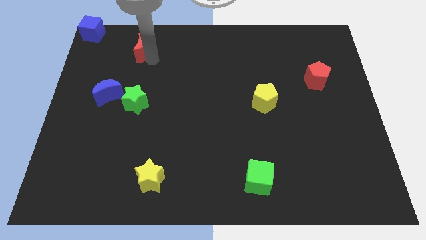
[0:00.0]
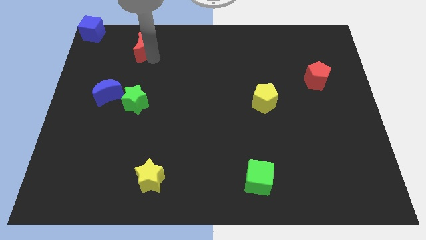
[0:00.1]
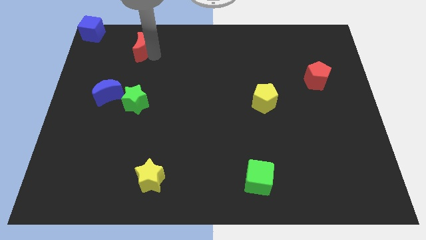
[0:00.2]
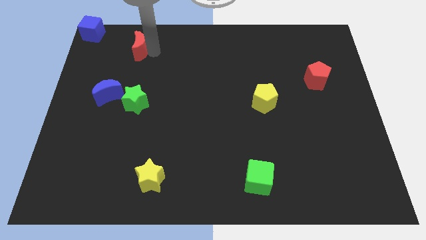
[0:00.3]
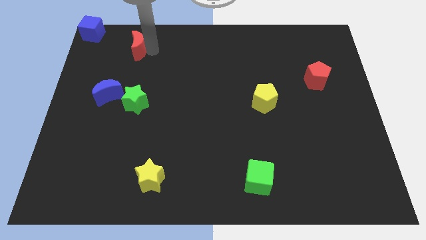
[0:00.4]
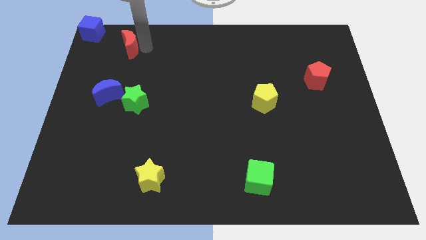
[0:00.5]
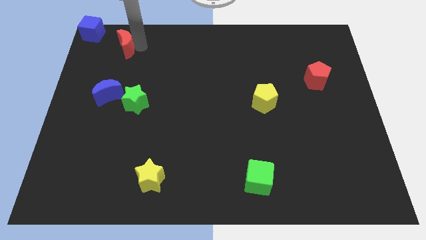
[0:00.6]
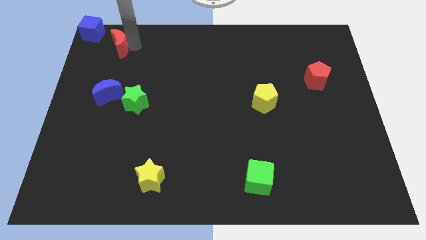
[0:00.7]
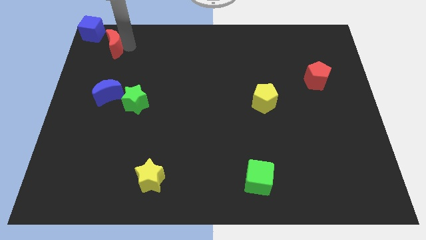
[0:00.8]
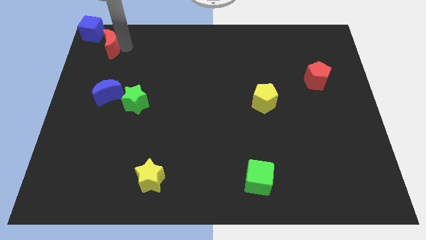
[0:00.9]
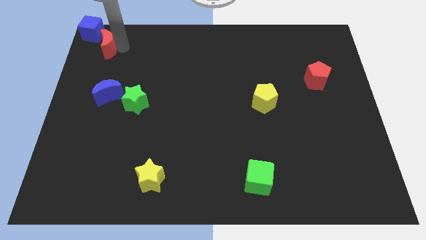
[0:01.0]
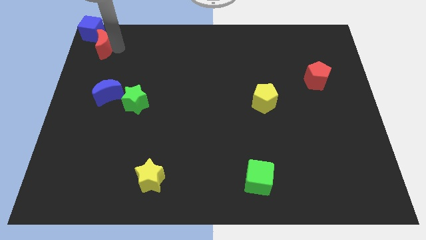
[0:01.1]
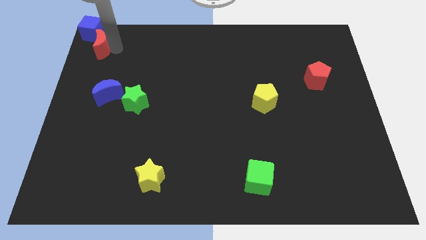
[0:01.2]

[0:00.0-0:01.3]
move the red crescent near the blue cube to the top right of the board

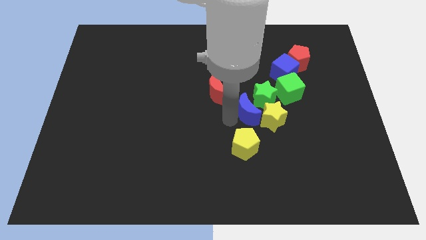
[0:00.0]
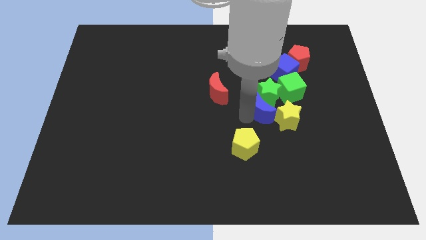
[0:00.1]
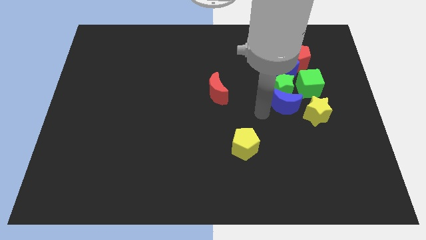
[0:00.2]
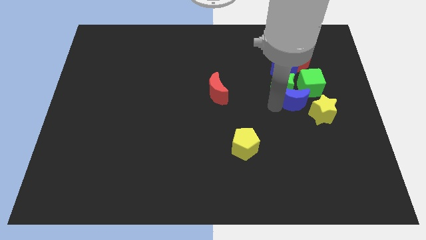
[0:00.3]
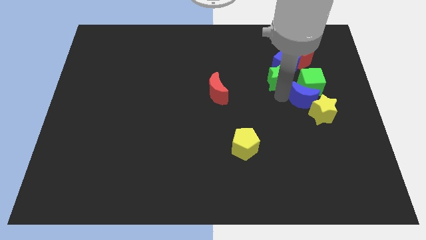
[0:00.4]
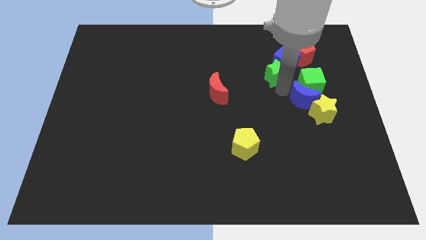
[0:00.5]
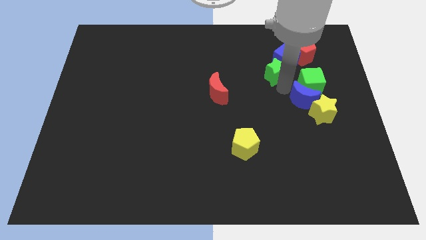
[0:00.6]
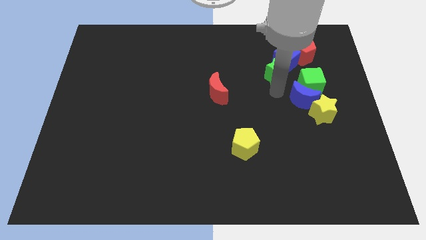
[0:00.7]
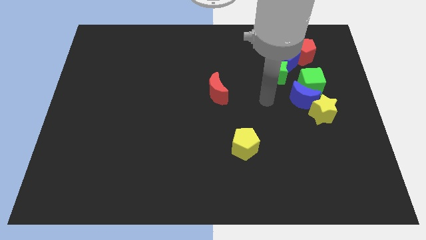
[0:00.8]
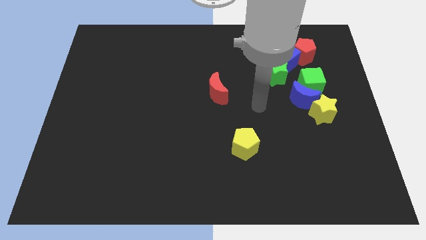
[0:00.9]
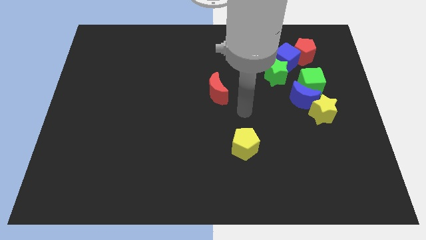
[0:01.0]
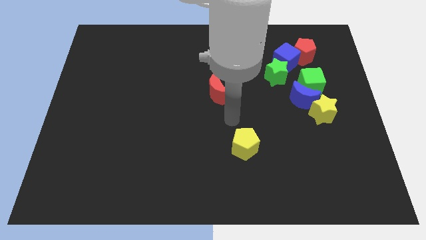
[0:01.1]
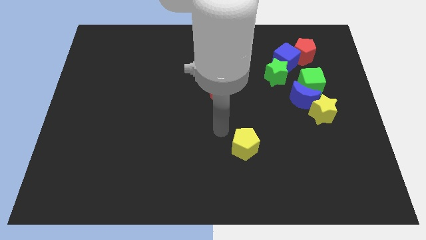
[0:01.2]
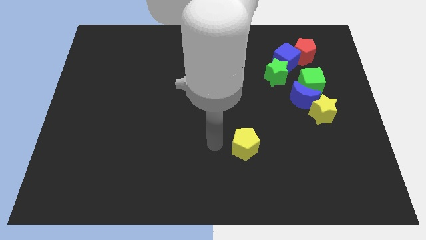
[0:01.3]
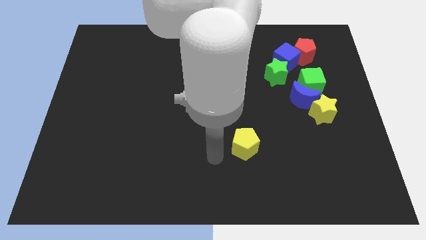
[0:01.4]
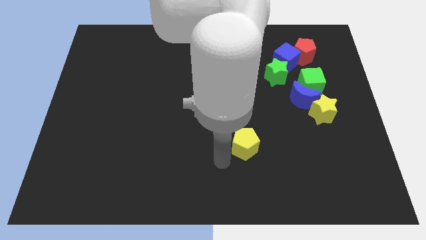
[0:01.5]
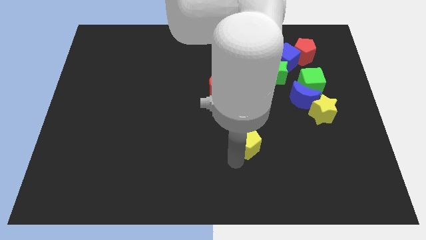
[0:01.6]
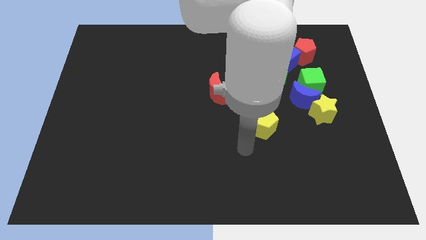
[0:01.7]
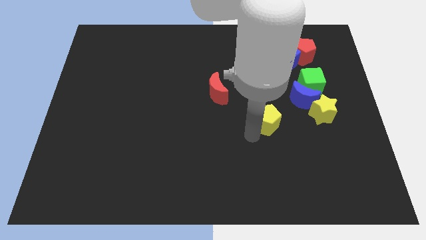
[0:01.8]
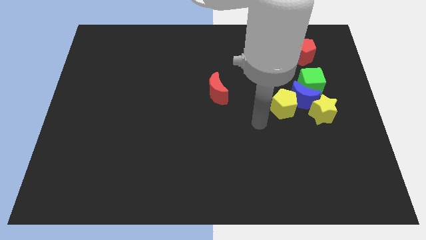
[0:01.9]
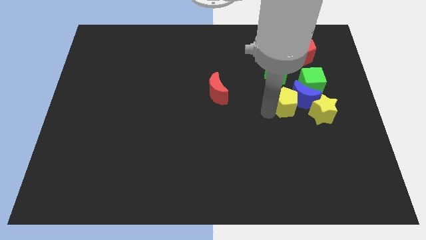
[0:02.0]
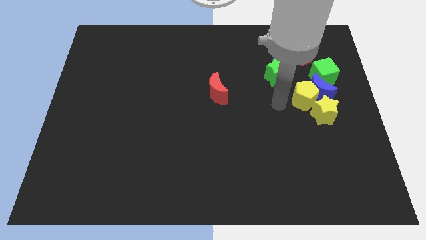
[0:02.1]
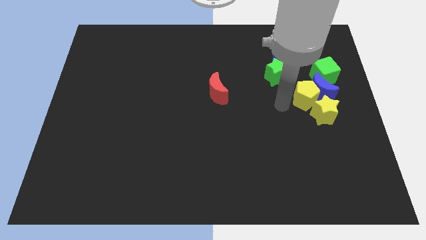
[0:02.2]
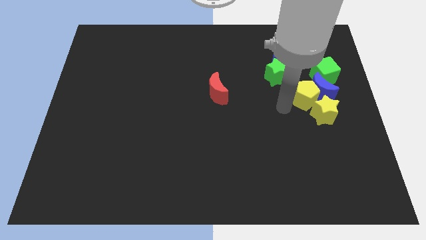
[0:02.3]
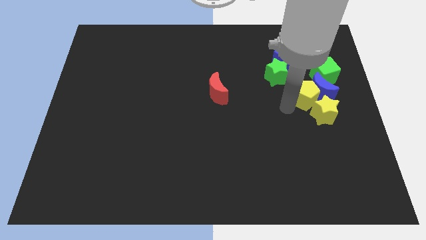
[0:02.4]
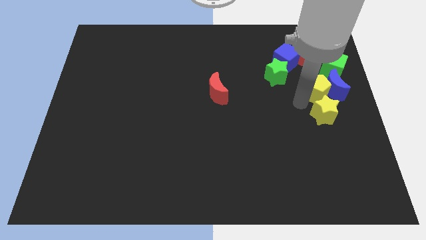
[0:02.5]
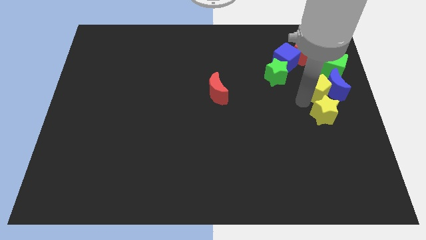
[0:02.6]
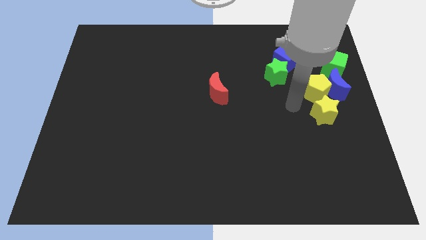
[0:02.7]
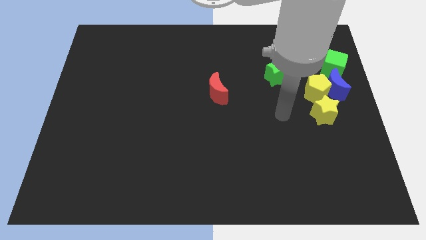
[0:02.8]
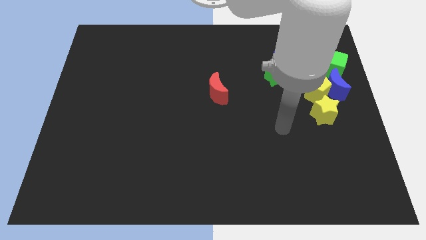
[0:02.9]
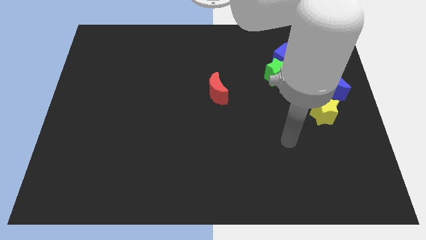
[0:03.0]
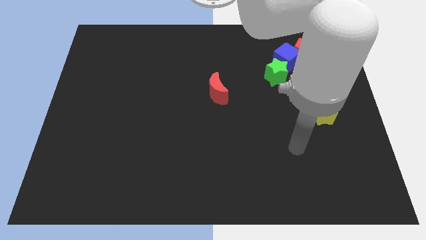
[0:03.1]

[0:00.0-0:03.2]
move yellow pentagon on the top of yellow star

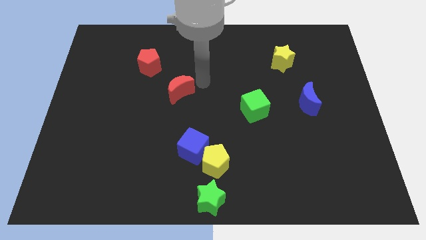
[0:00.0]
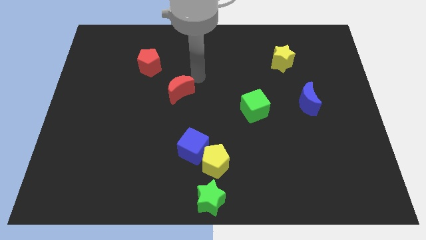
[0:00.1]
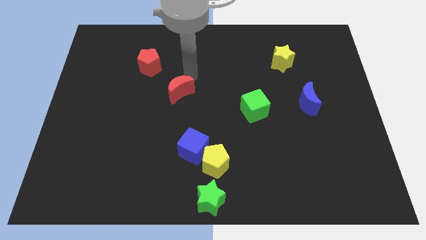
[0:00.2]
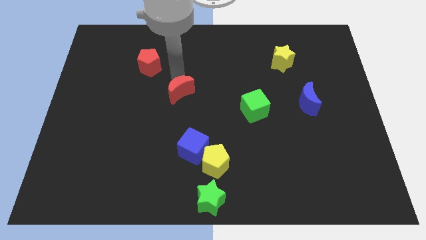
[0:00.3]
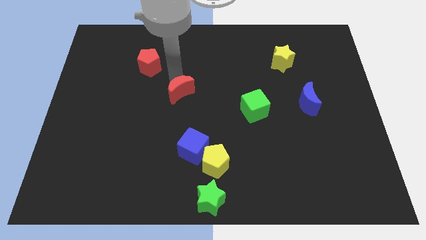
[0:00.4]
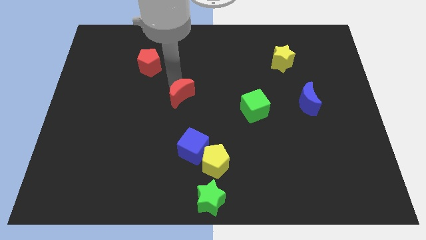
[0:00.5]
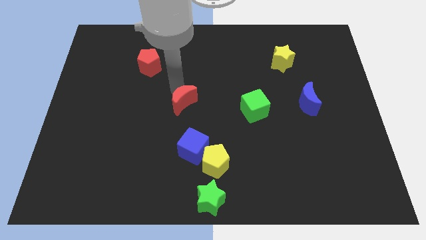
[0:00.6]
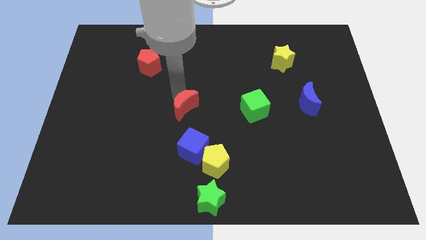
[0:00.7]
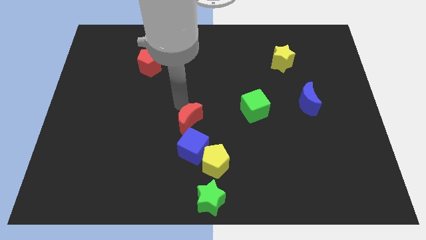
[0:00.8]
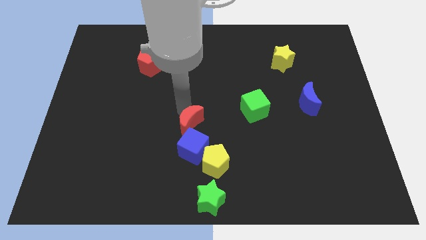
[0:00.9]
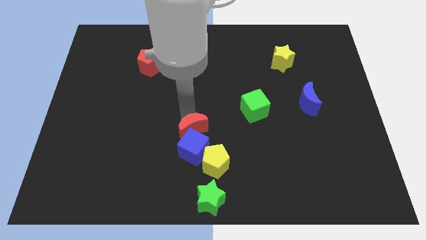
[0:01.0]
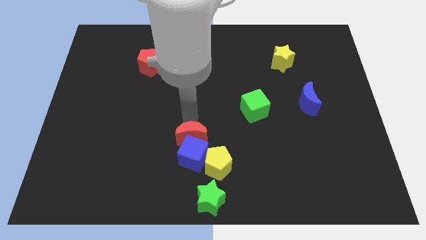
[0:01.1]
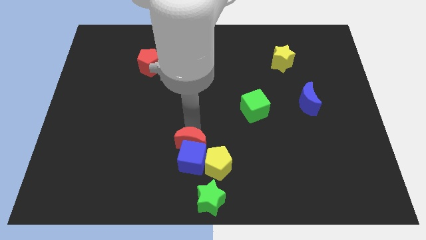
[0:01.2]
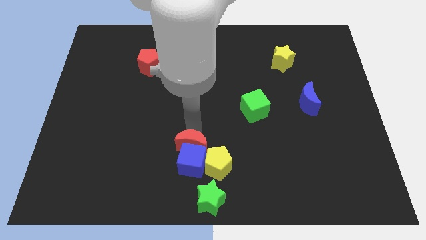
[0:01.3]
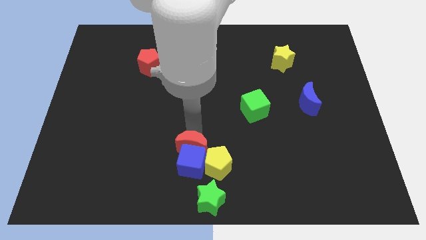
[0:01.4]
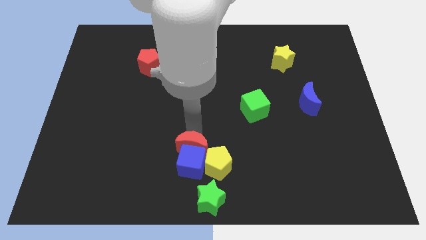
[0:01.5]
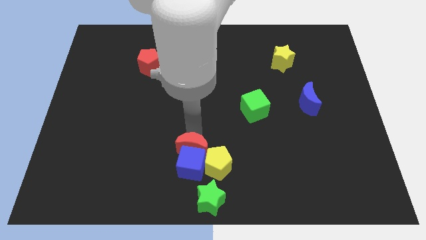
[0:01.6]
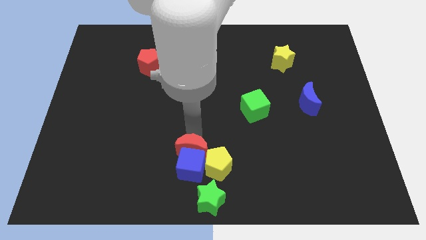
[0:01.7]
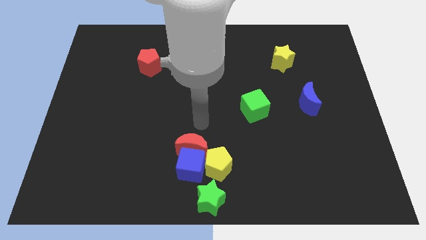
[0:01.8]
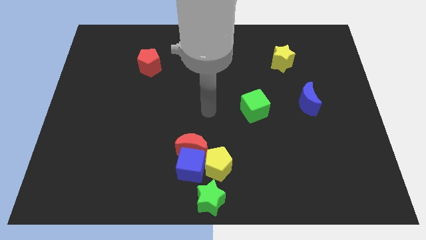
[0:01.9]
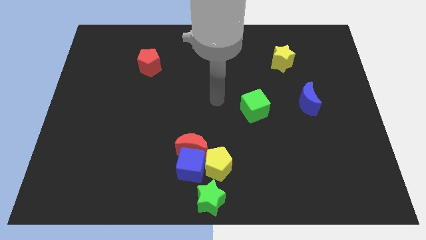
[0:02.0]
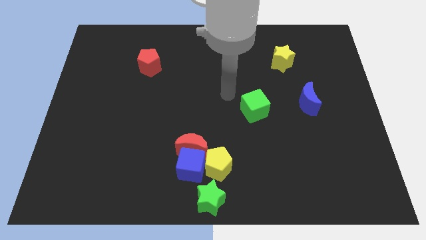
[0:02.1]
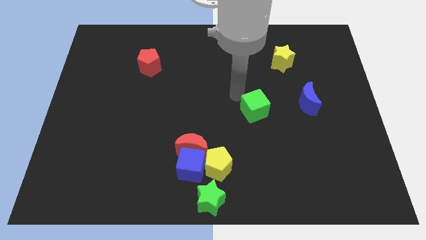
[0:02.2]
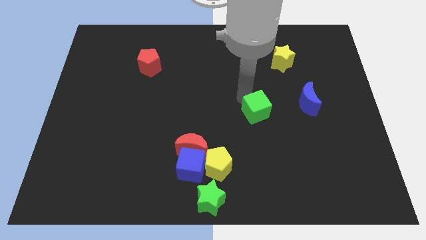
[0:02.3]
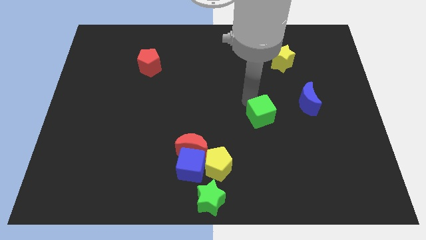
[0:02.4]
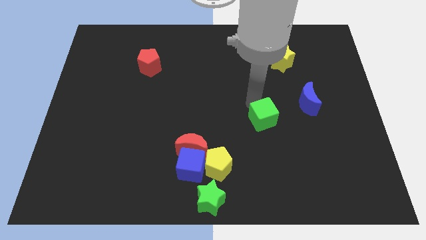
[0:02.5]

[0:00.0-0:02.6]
move the red crescent above the blue cube

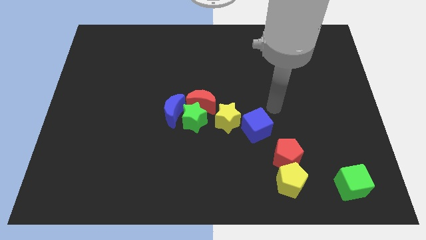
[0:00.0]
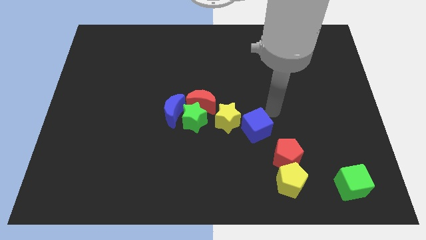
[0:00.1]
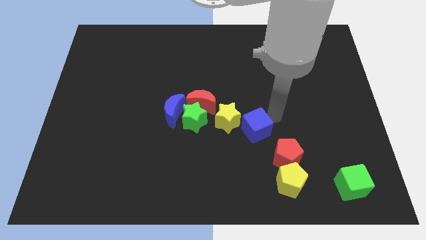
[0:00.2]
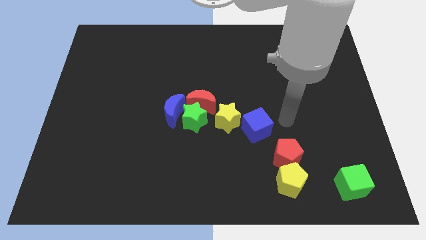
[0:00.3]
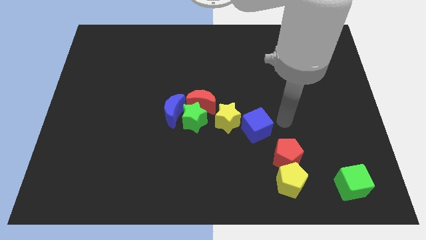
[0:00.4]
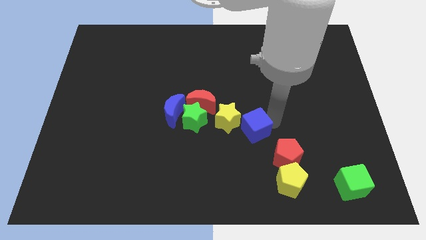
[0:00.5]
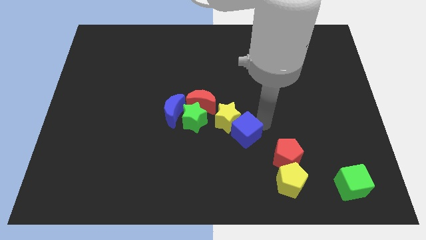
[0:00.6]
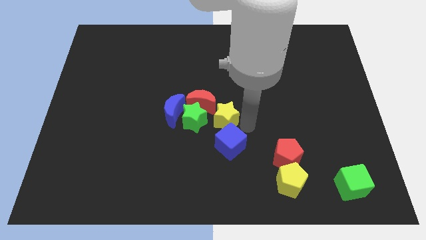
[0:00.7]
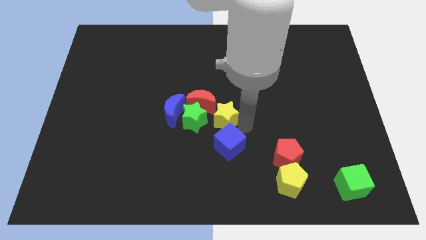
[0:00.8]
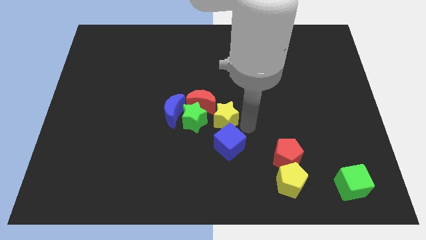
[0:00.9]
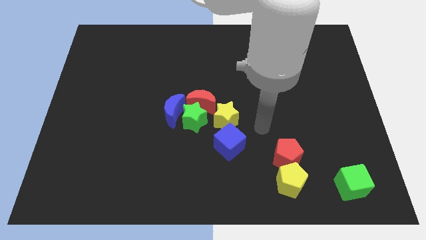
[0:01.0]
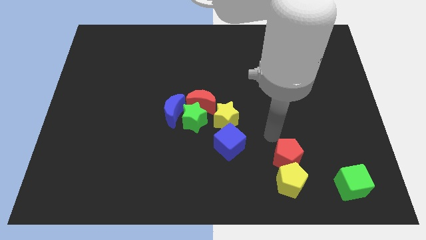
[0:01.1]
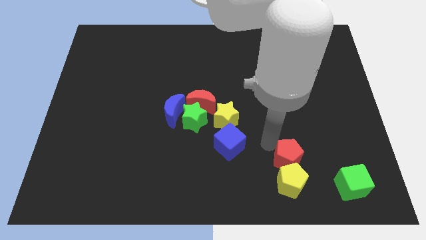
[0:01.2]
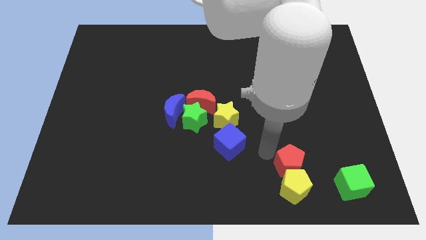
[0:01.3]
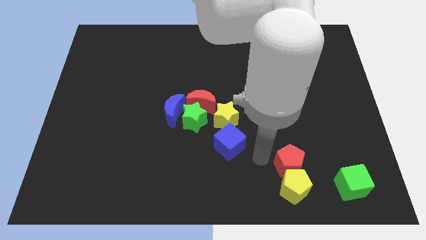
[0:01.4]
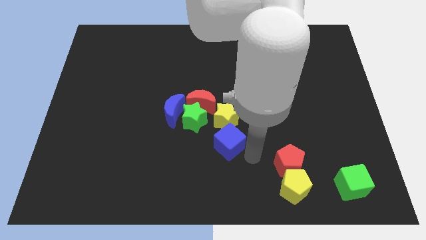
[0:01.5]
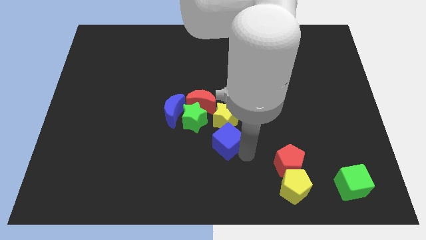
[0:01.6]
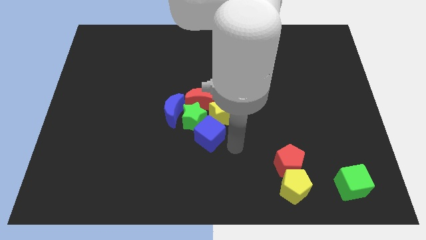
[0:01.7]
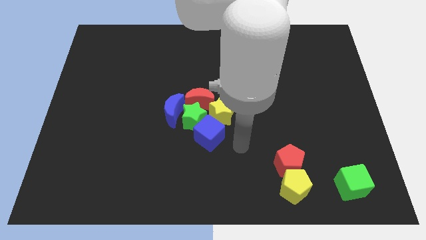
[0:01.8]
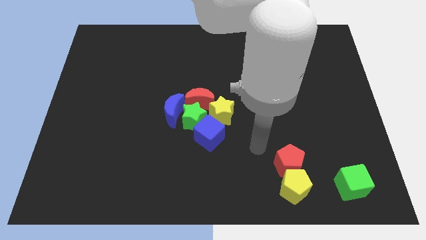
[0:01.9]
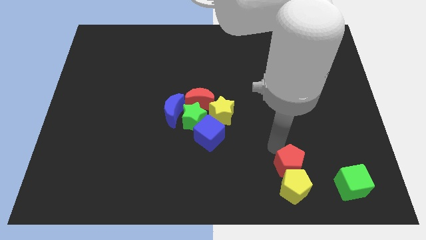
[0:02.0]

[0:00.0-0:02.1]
push the blue below the stars at the center
